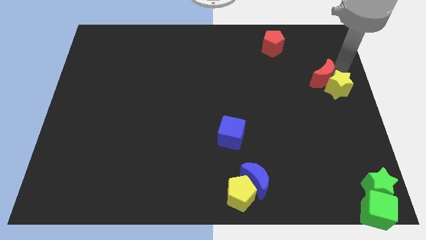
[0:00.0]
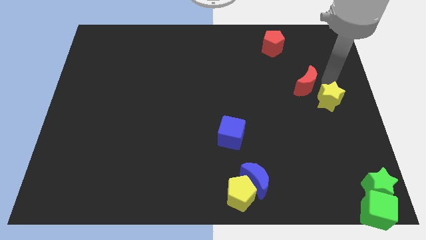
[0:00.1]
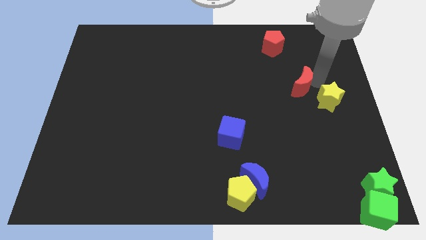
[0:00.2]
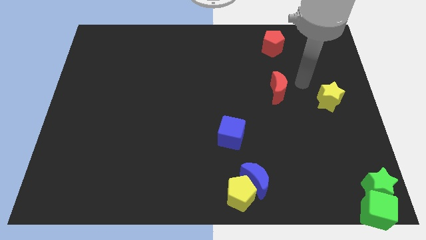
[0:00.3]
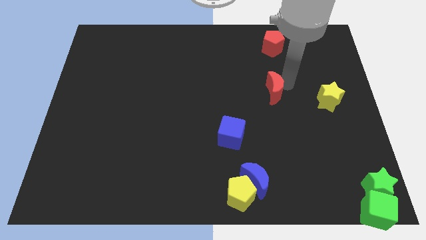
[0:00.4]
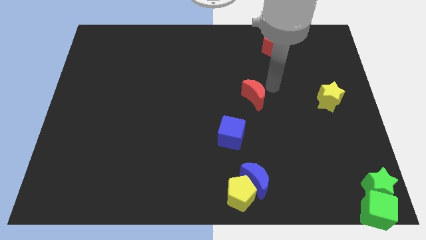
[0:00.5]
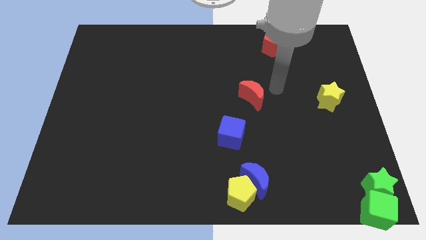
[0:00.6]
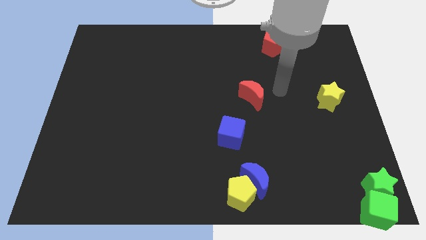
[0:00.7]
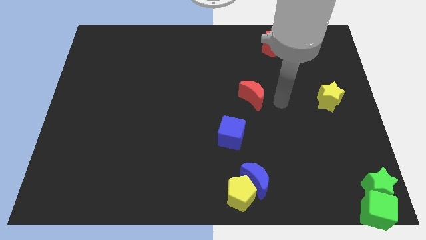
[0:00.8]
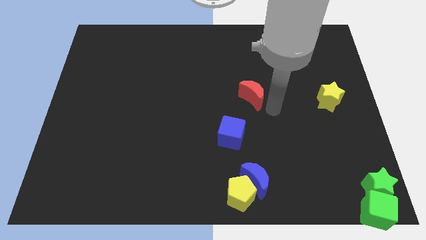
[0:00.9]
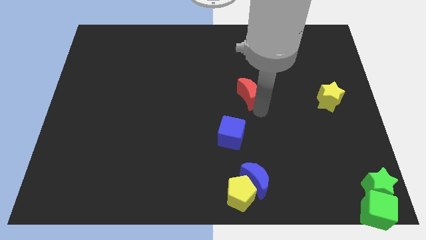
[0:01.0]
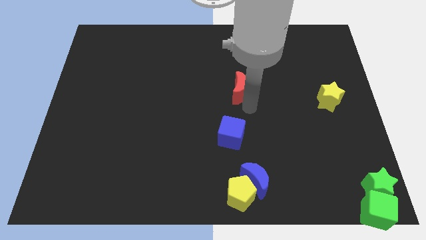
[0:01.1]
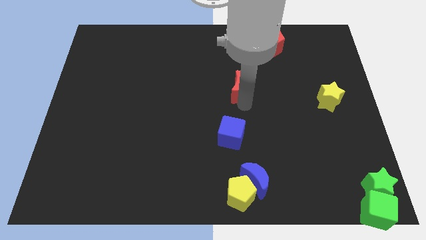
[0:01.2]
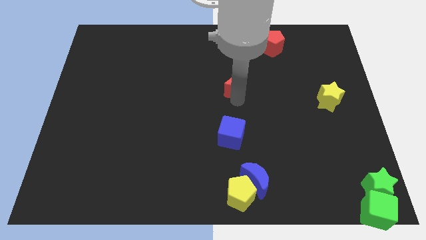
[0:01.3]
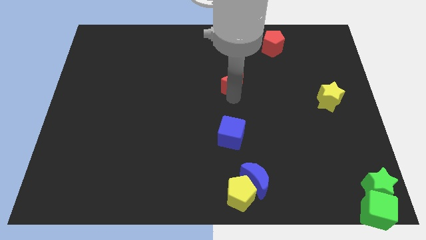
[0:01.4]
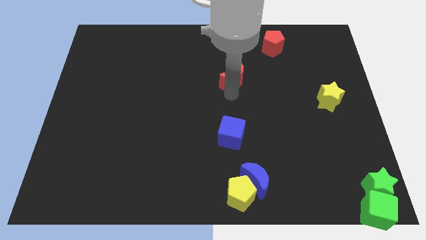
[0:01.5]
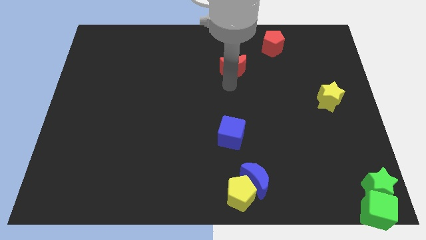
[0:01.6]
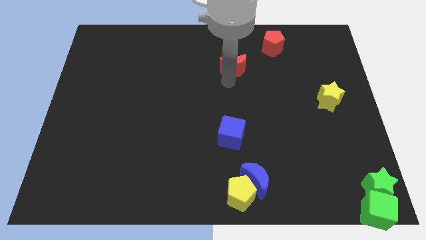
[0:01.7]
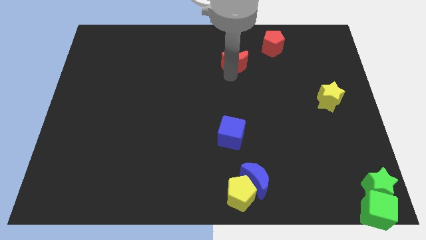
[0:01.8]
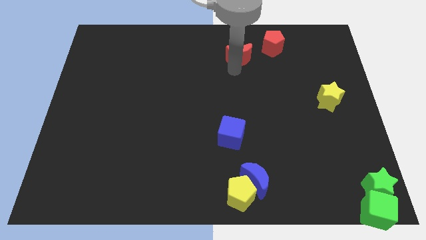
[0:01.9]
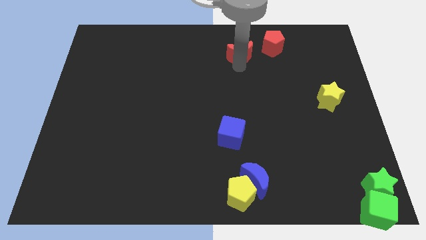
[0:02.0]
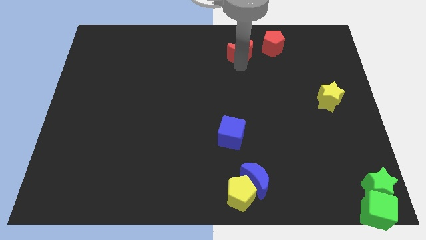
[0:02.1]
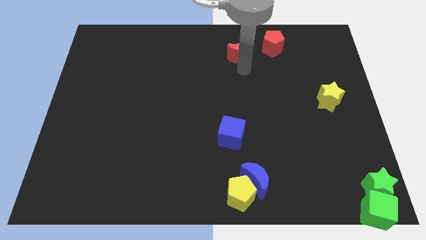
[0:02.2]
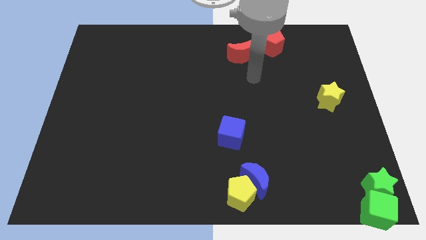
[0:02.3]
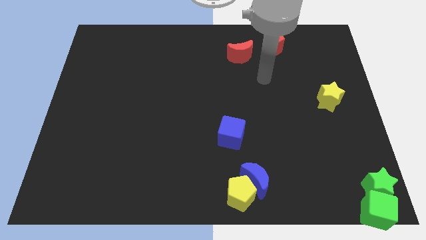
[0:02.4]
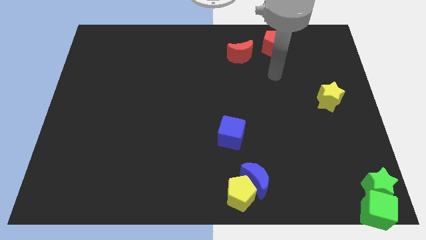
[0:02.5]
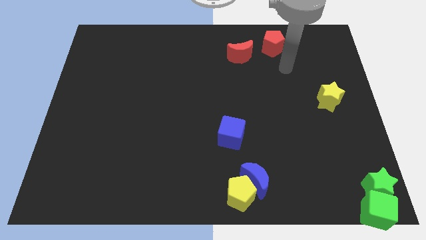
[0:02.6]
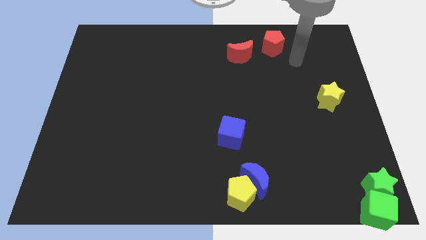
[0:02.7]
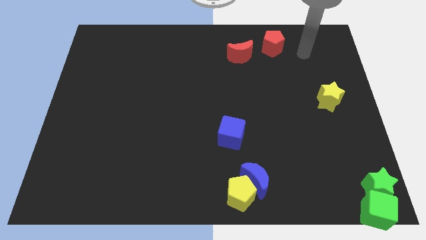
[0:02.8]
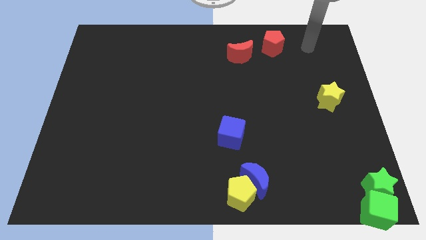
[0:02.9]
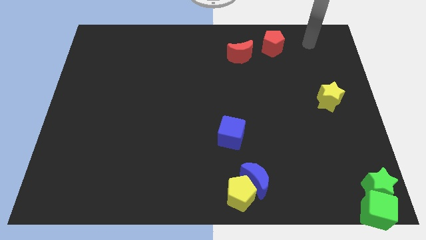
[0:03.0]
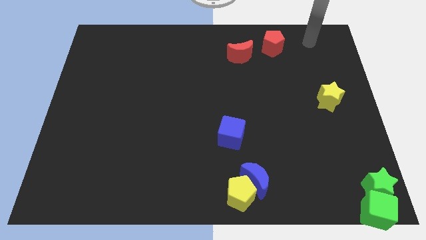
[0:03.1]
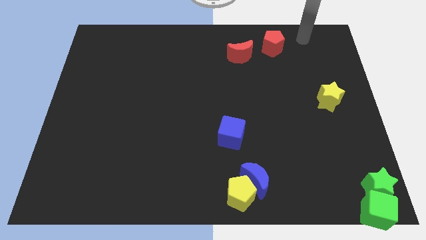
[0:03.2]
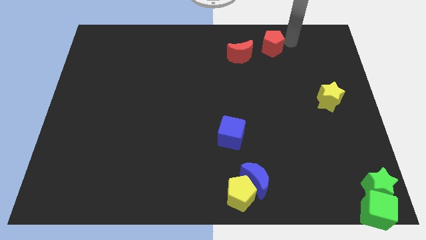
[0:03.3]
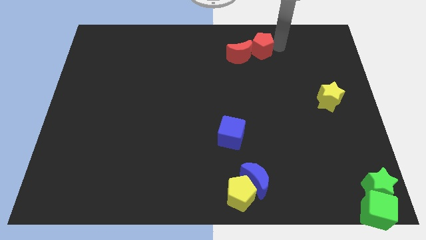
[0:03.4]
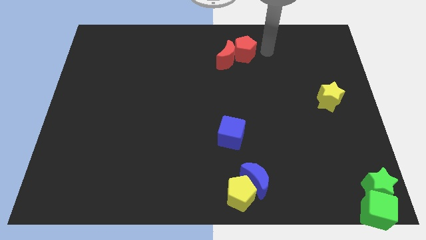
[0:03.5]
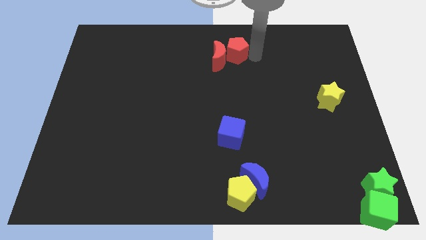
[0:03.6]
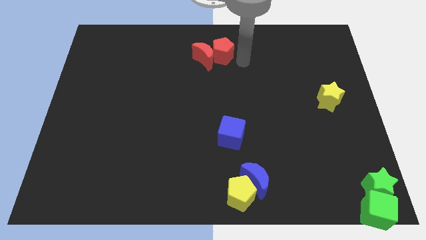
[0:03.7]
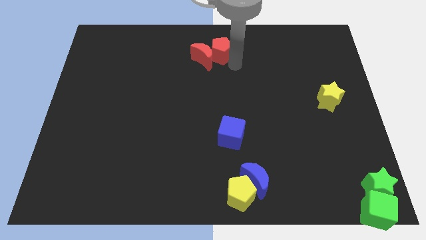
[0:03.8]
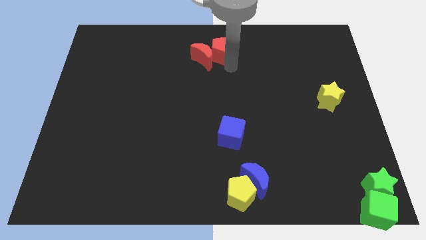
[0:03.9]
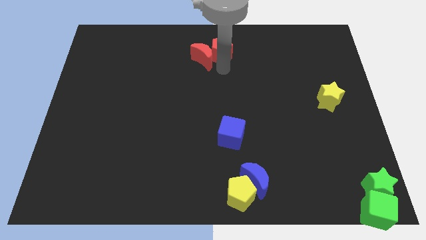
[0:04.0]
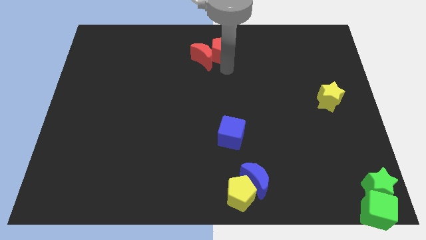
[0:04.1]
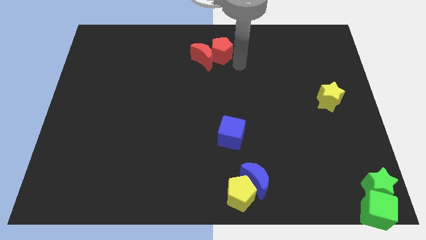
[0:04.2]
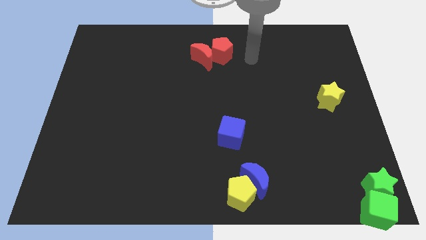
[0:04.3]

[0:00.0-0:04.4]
push red crescent towards the red pentagon

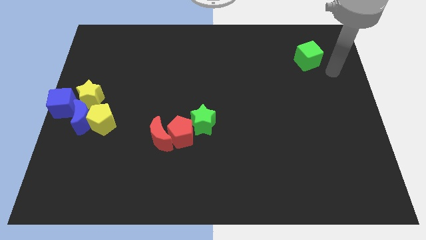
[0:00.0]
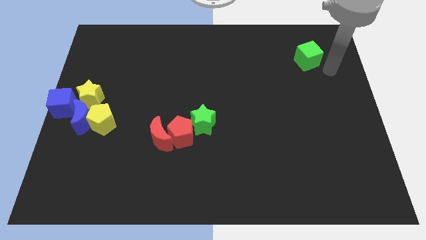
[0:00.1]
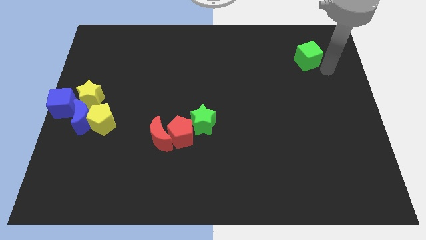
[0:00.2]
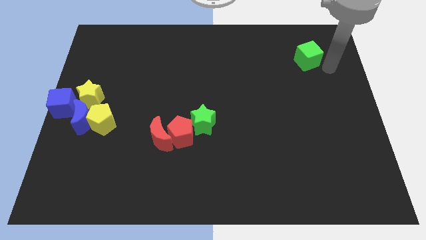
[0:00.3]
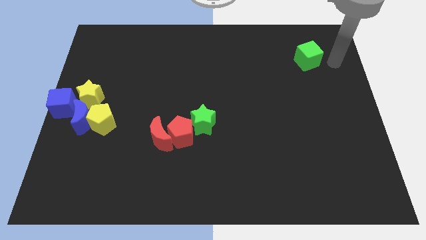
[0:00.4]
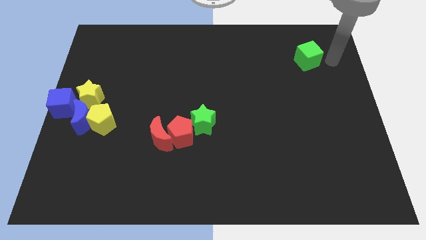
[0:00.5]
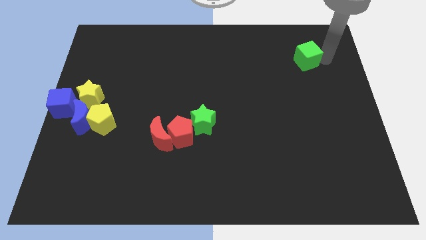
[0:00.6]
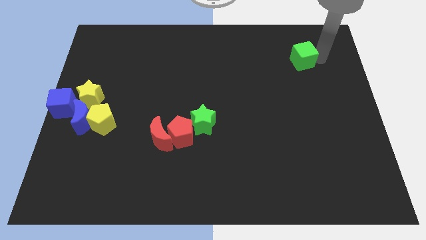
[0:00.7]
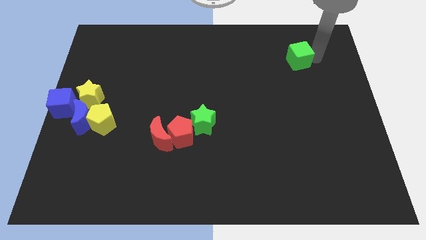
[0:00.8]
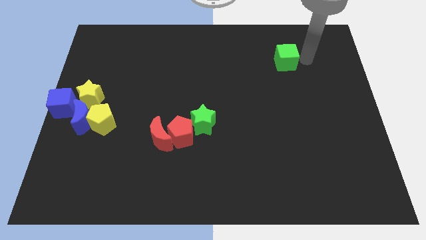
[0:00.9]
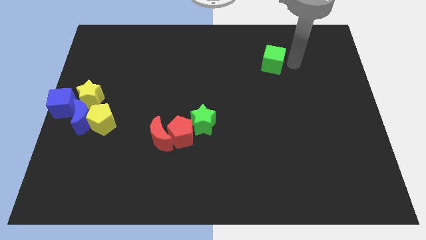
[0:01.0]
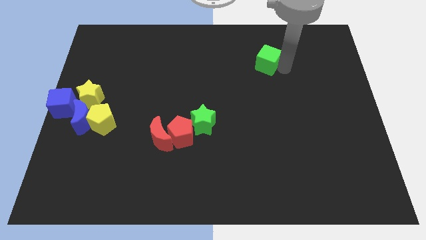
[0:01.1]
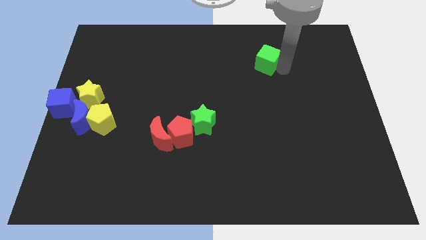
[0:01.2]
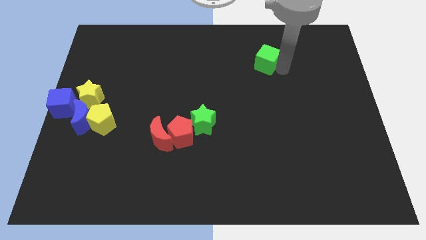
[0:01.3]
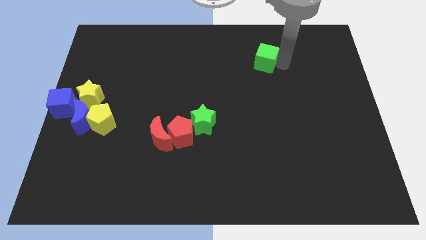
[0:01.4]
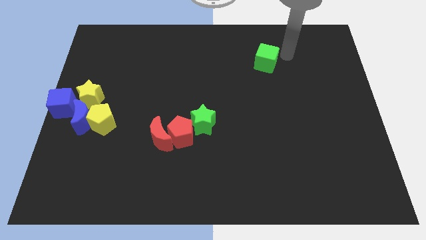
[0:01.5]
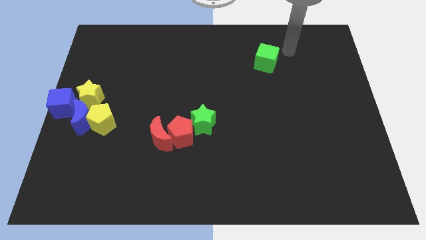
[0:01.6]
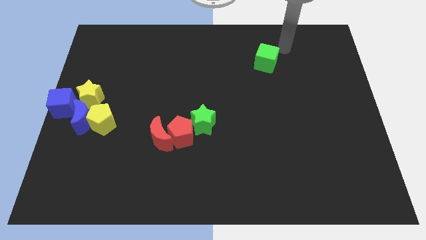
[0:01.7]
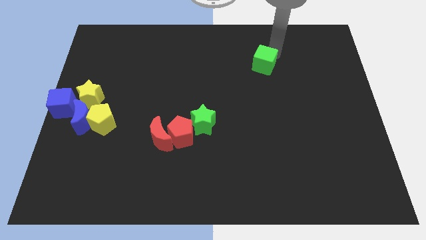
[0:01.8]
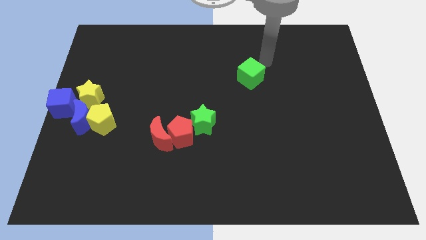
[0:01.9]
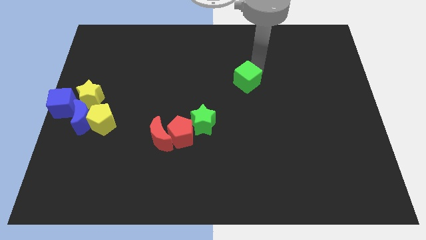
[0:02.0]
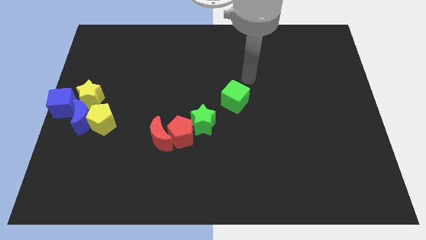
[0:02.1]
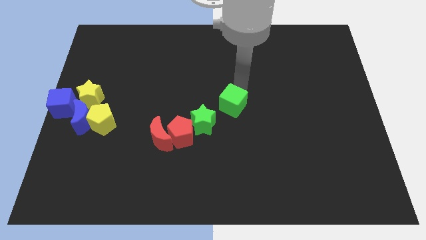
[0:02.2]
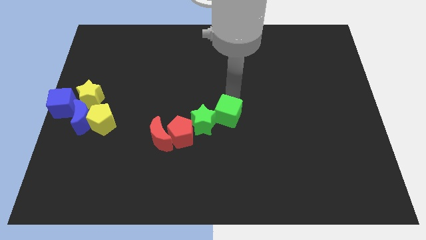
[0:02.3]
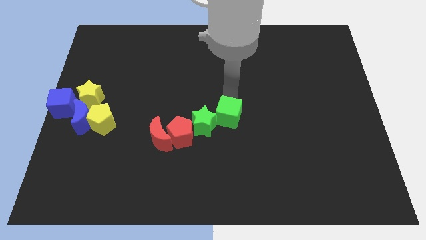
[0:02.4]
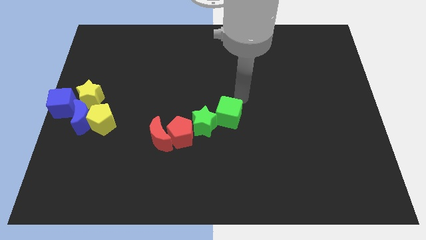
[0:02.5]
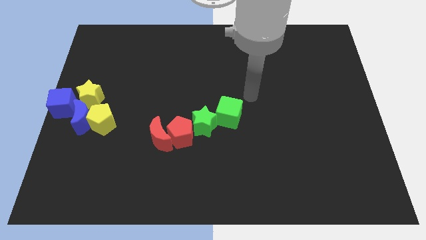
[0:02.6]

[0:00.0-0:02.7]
push the green cube into the green star

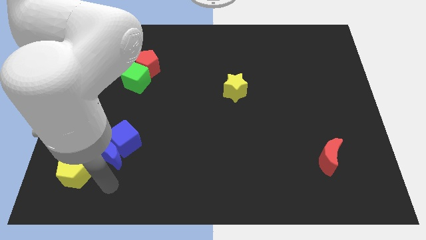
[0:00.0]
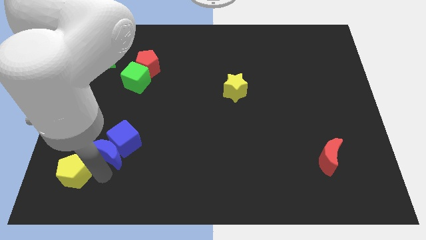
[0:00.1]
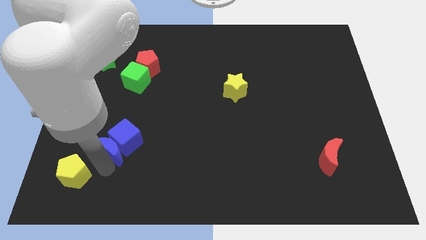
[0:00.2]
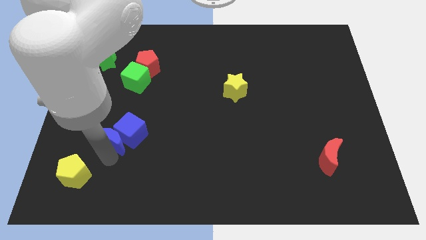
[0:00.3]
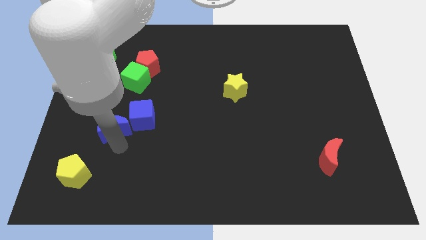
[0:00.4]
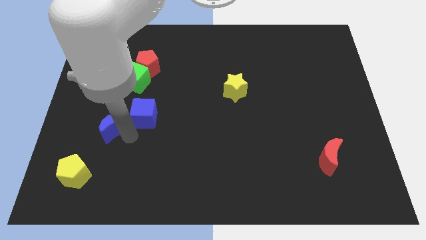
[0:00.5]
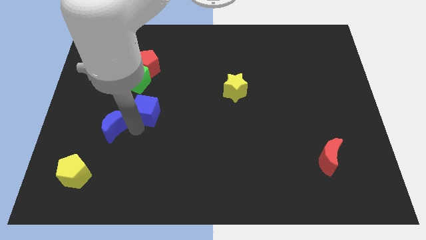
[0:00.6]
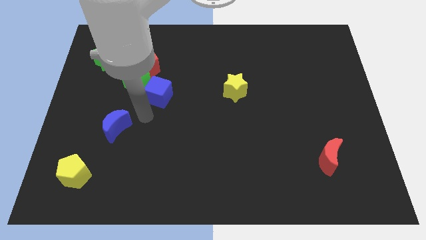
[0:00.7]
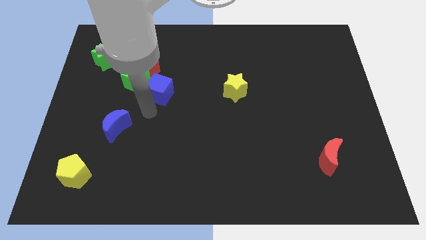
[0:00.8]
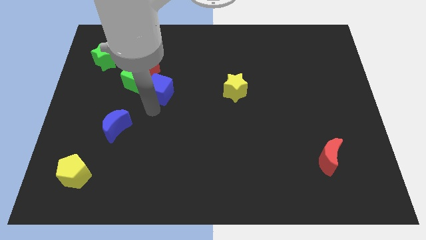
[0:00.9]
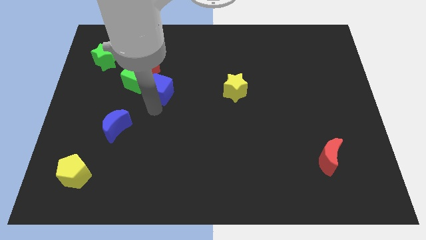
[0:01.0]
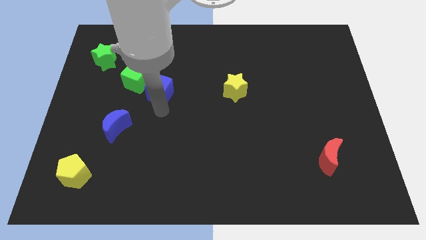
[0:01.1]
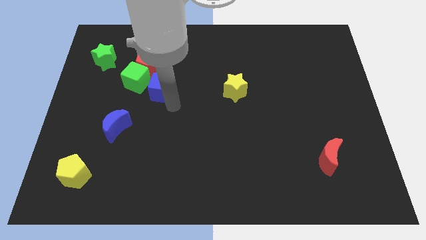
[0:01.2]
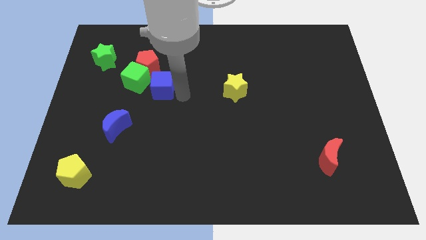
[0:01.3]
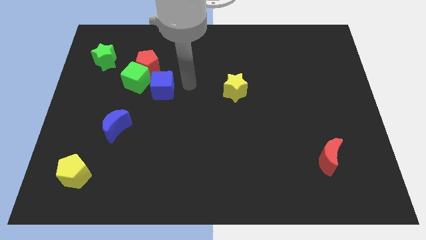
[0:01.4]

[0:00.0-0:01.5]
arrange the blue blocks to form a line diagonally to yellow pentagon

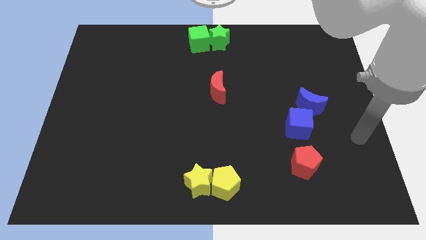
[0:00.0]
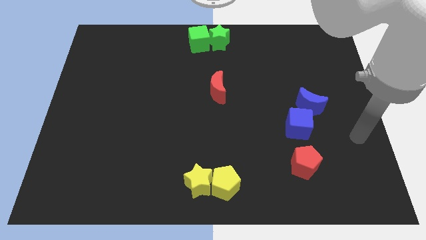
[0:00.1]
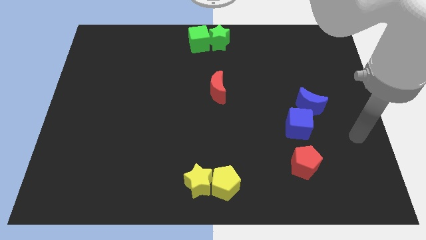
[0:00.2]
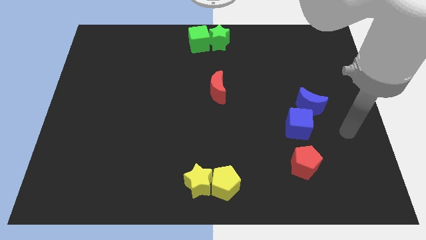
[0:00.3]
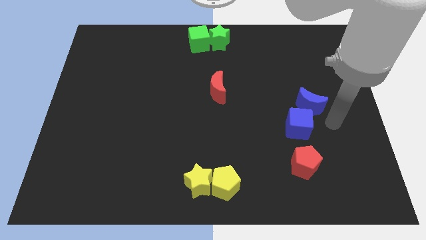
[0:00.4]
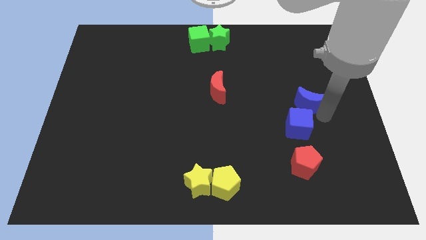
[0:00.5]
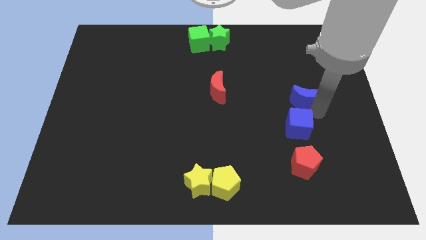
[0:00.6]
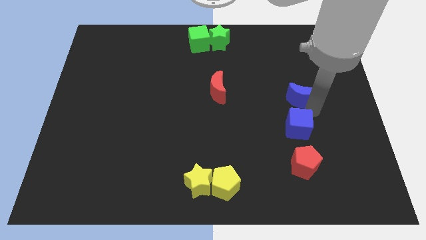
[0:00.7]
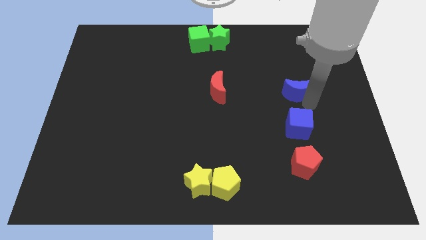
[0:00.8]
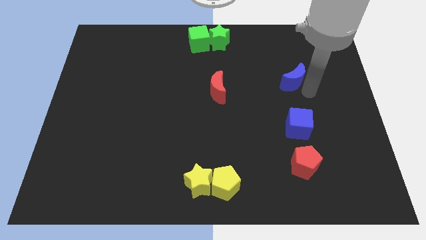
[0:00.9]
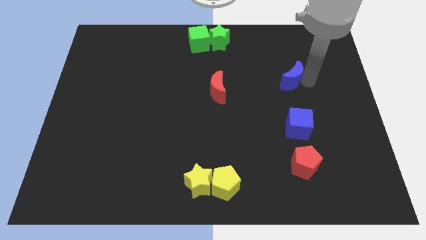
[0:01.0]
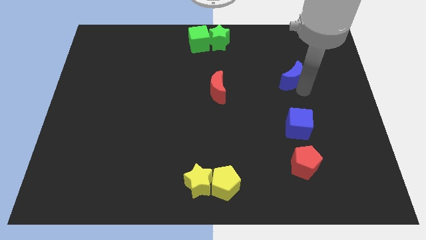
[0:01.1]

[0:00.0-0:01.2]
place the blue crescent on top of the blue cube to form a vertical line
